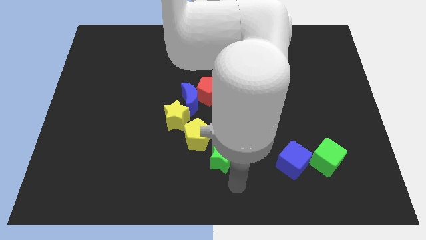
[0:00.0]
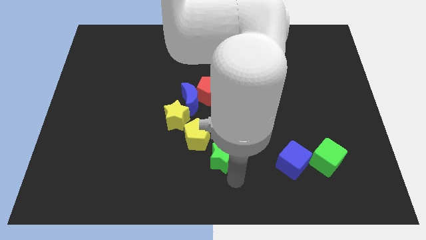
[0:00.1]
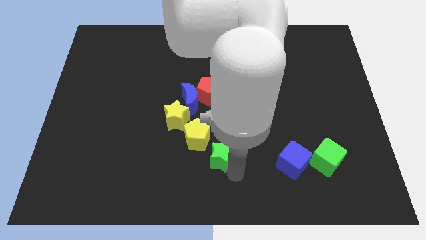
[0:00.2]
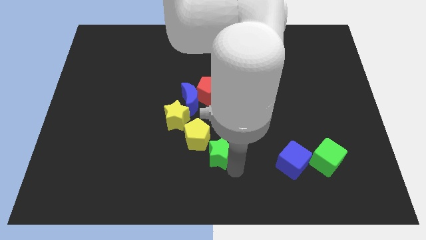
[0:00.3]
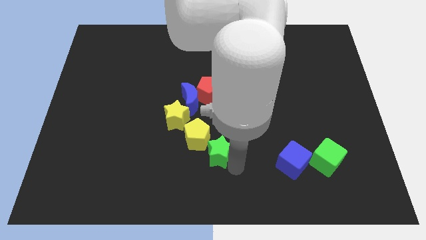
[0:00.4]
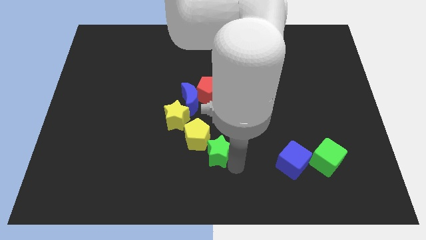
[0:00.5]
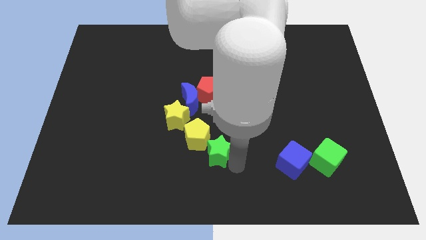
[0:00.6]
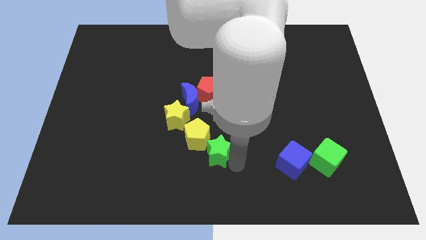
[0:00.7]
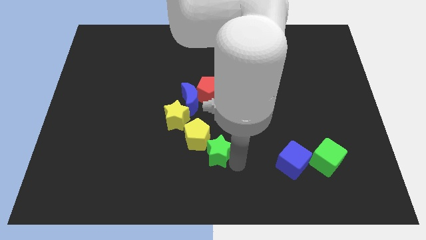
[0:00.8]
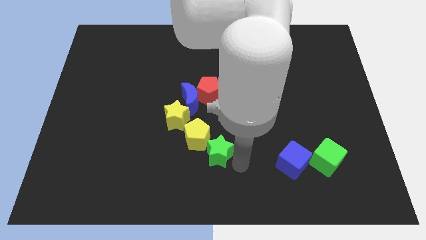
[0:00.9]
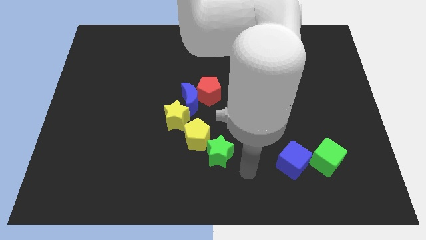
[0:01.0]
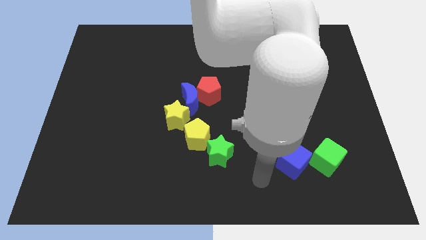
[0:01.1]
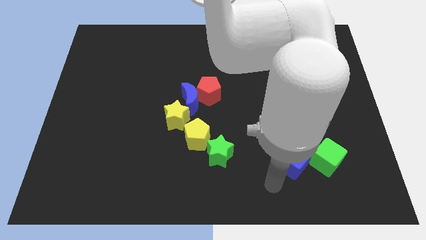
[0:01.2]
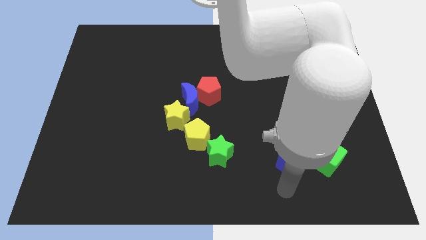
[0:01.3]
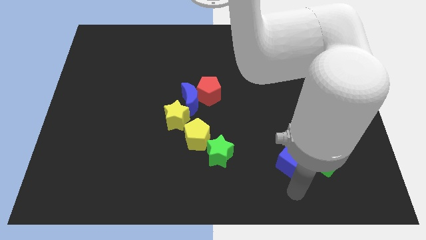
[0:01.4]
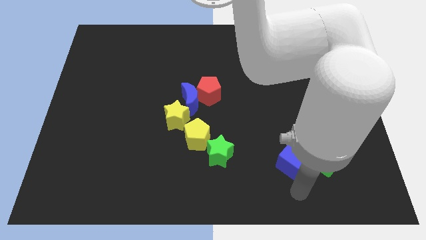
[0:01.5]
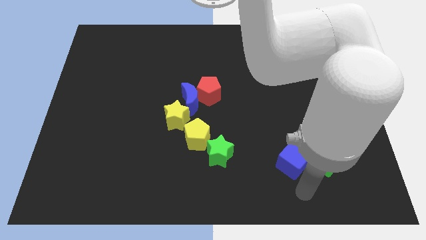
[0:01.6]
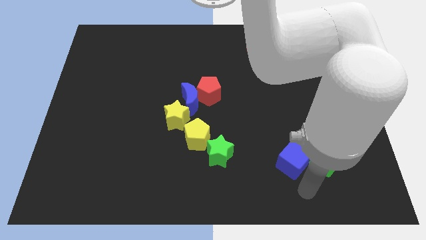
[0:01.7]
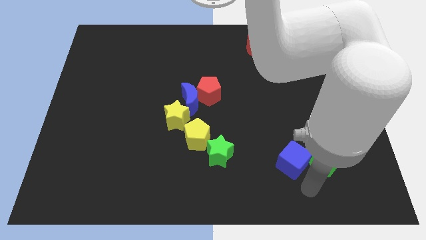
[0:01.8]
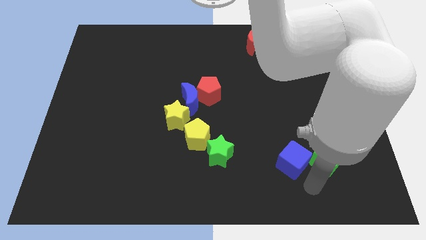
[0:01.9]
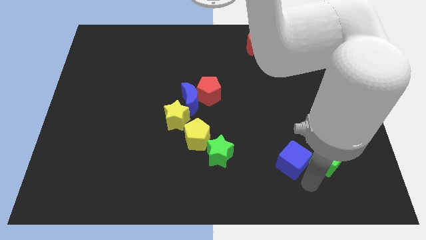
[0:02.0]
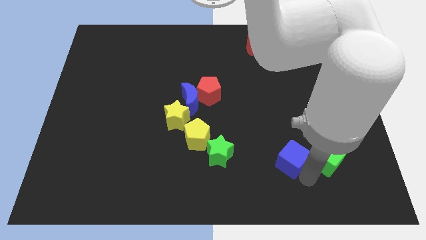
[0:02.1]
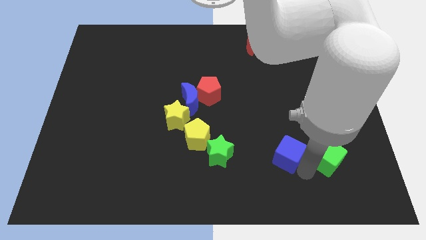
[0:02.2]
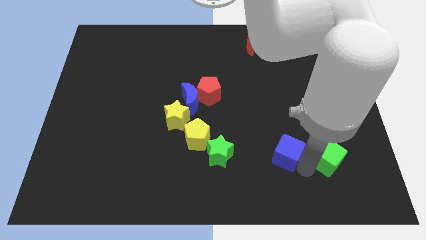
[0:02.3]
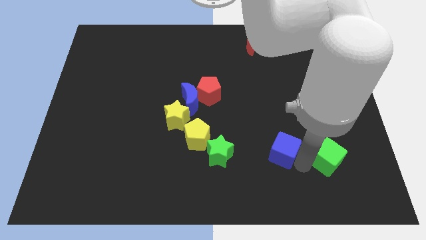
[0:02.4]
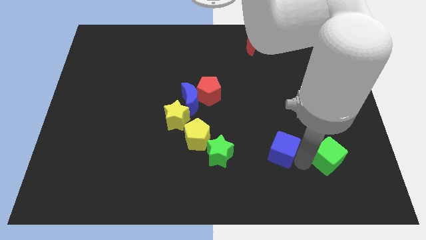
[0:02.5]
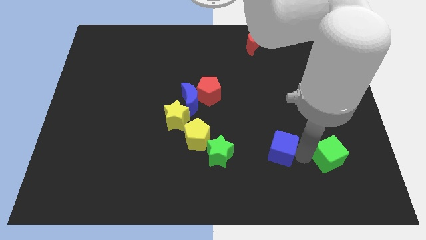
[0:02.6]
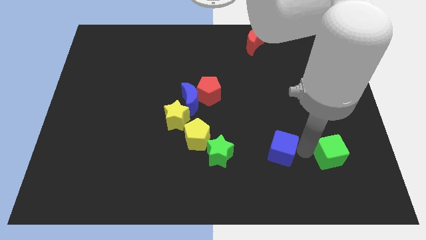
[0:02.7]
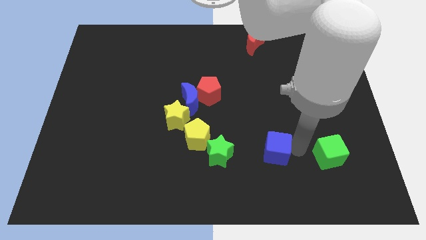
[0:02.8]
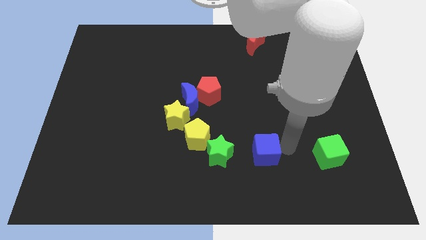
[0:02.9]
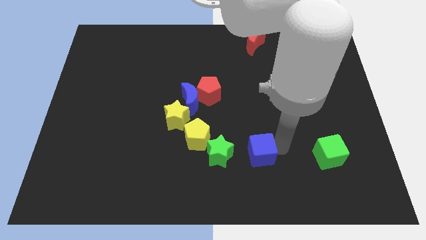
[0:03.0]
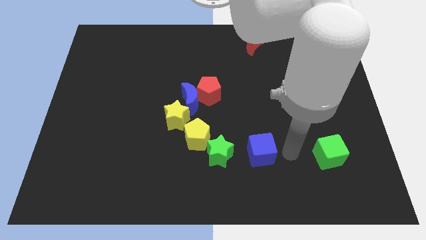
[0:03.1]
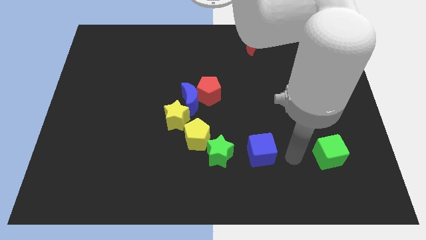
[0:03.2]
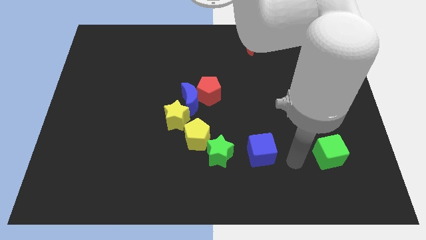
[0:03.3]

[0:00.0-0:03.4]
separate the blue cube from the green cube

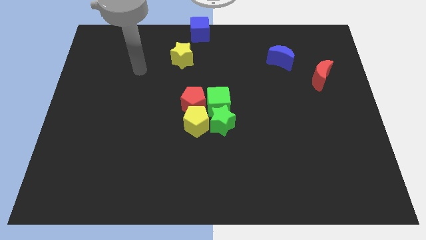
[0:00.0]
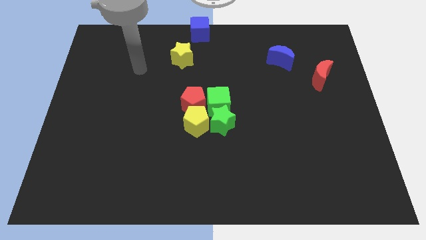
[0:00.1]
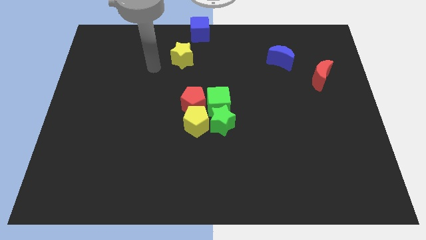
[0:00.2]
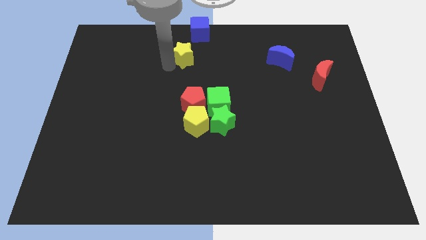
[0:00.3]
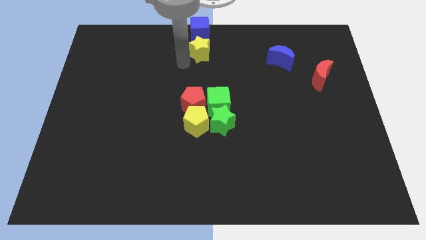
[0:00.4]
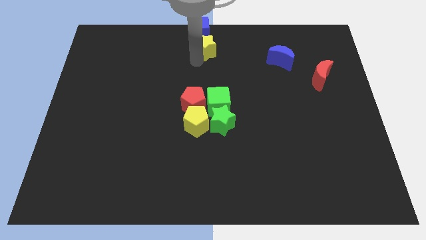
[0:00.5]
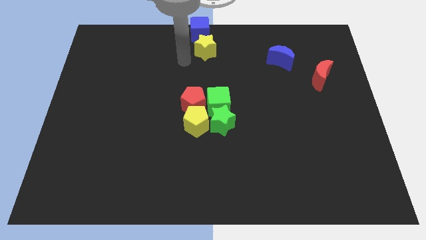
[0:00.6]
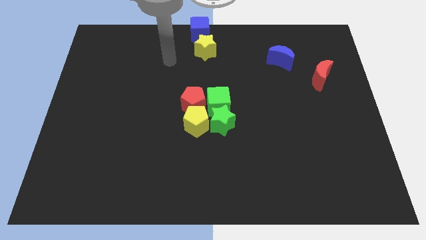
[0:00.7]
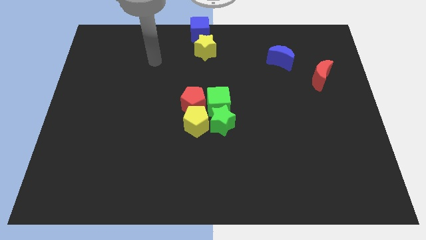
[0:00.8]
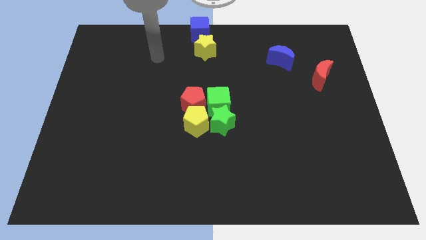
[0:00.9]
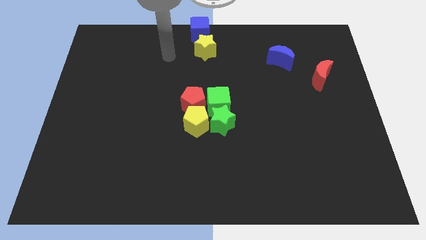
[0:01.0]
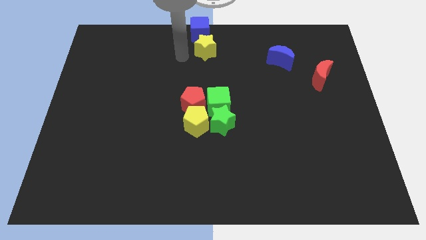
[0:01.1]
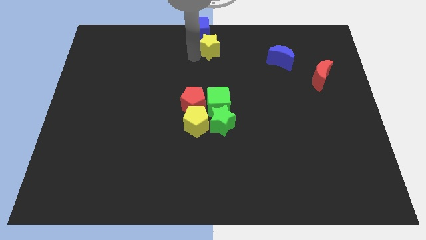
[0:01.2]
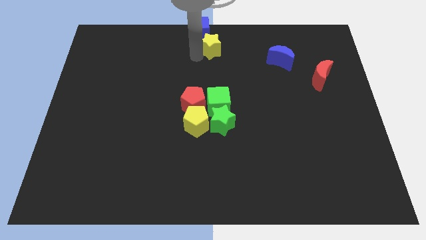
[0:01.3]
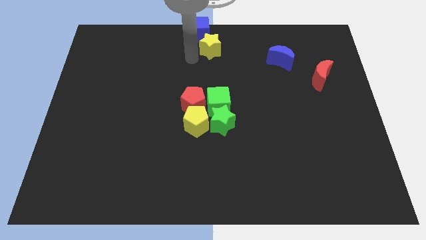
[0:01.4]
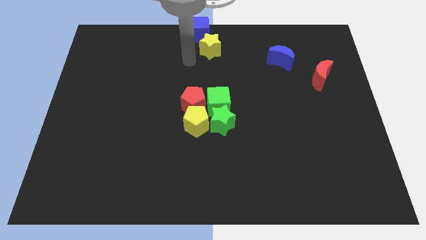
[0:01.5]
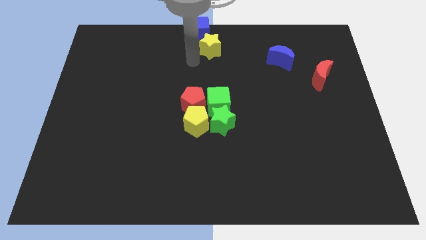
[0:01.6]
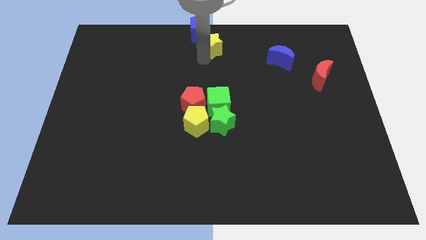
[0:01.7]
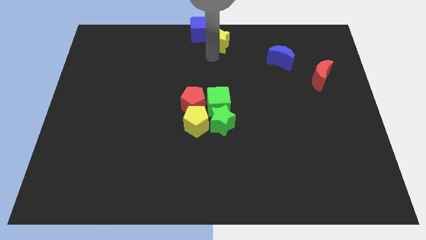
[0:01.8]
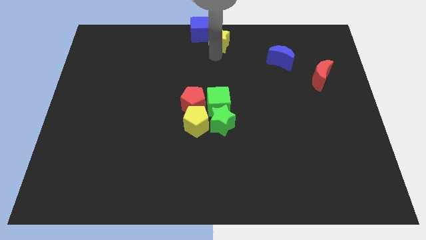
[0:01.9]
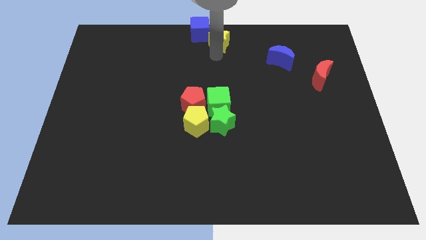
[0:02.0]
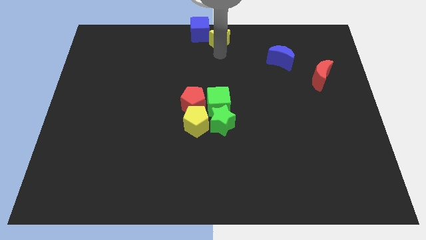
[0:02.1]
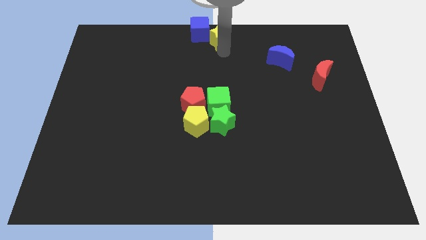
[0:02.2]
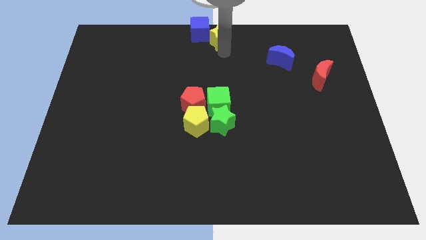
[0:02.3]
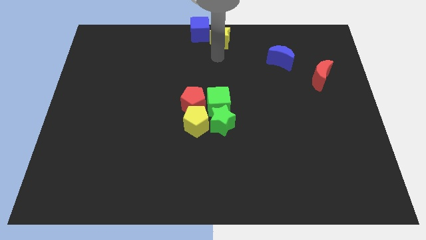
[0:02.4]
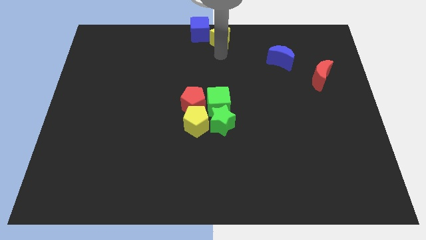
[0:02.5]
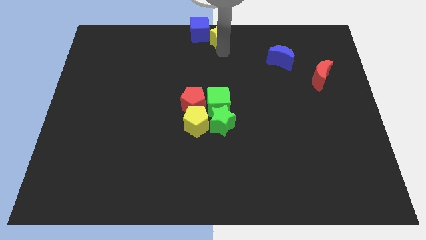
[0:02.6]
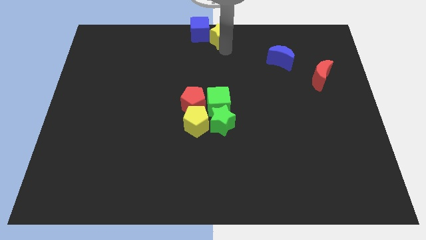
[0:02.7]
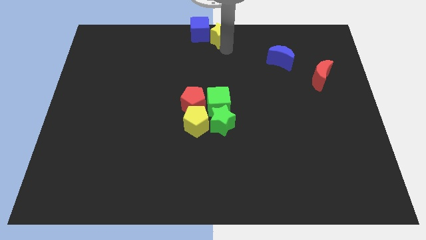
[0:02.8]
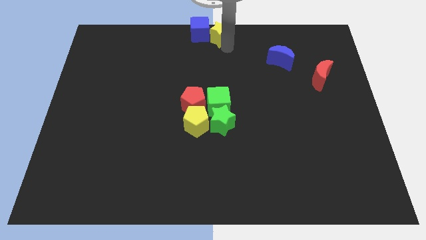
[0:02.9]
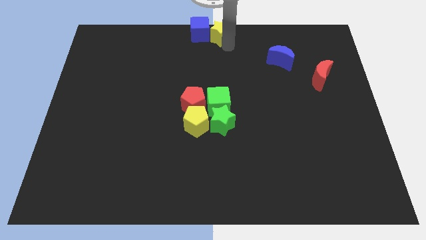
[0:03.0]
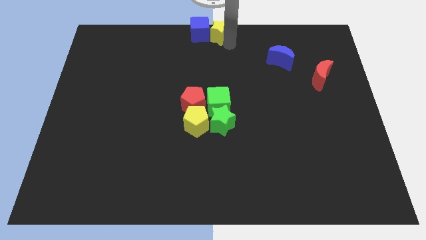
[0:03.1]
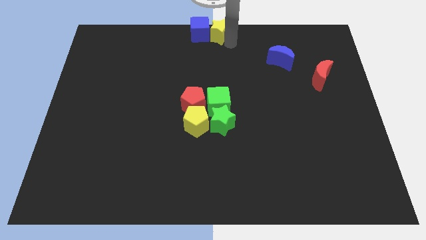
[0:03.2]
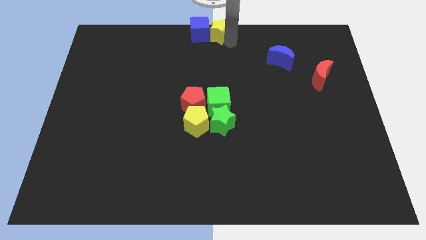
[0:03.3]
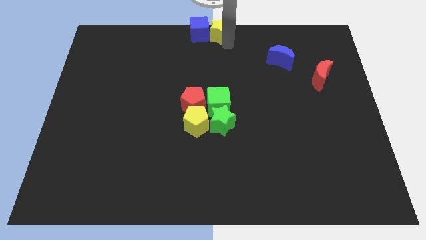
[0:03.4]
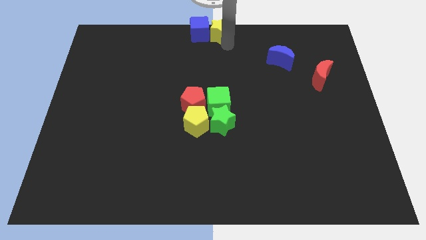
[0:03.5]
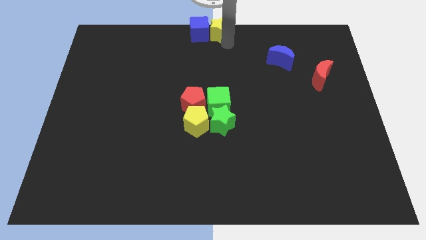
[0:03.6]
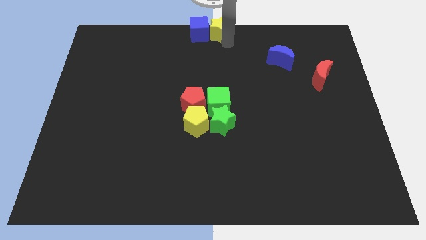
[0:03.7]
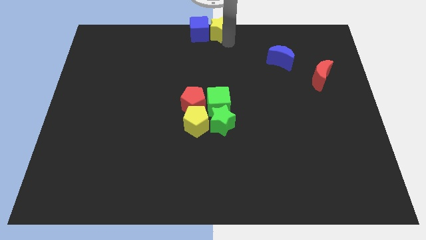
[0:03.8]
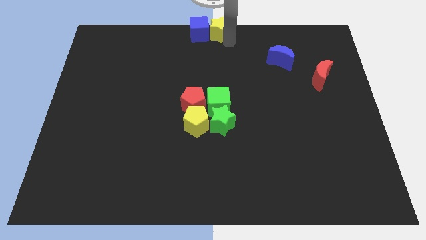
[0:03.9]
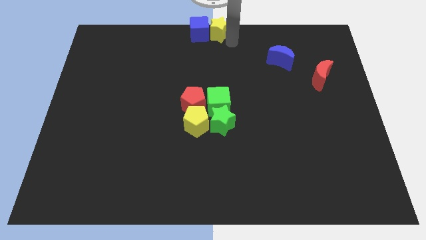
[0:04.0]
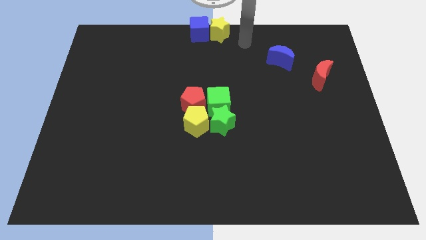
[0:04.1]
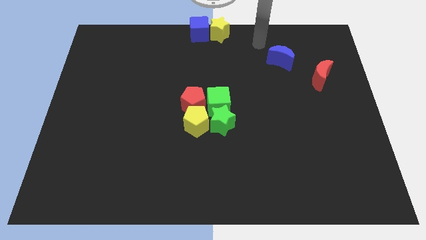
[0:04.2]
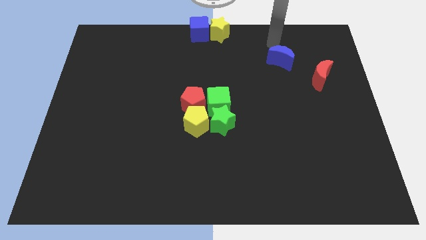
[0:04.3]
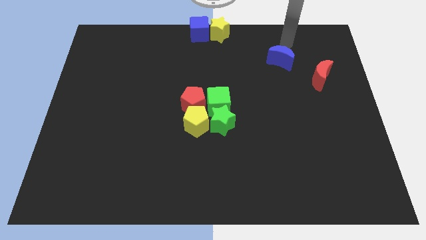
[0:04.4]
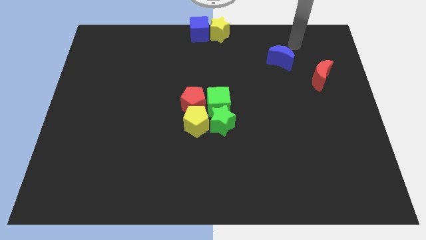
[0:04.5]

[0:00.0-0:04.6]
push the yellow star to the right of the blue cube

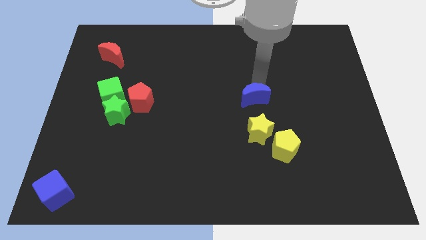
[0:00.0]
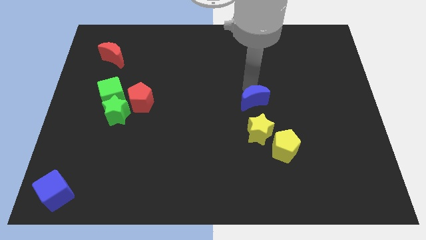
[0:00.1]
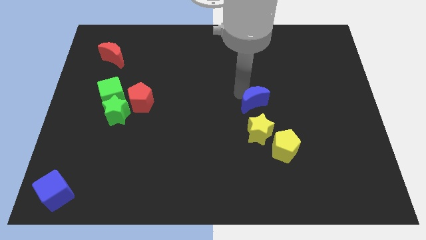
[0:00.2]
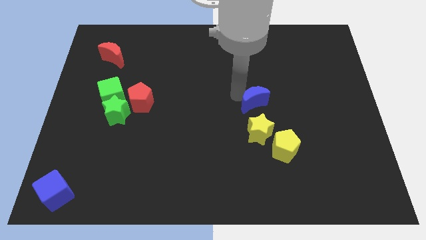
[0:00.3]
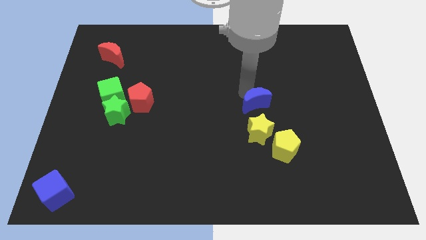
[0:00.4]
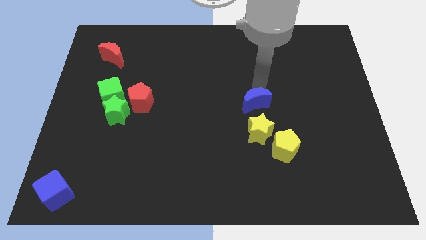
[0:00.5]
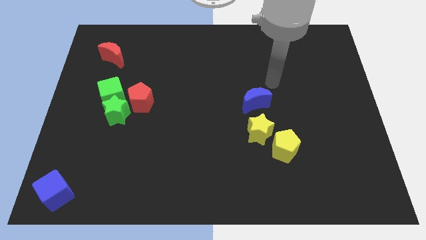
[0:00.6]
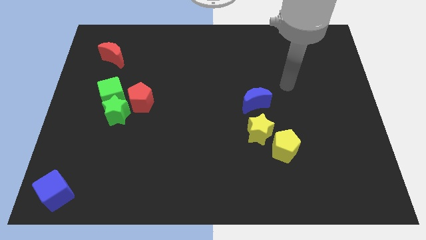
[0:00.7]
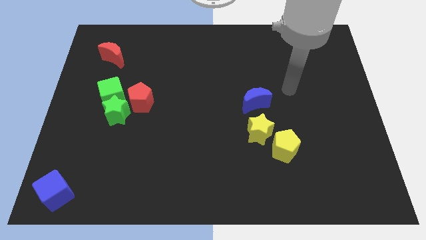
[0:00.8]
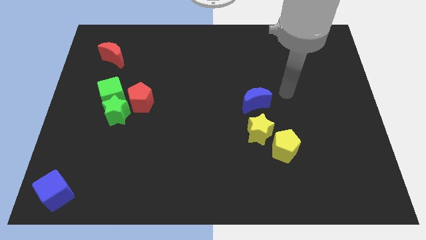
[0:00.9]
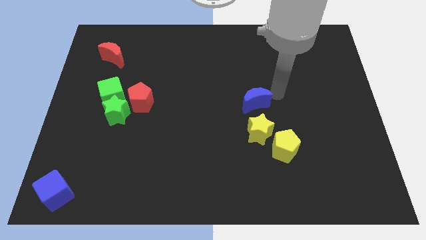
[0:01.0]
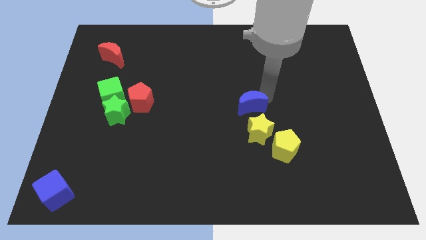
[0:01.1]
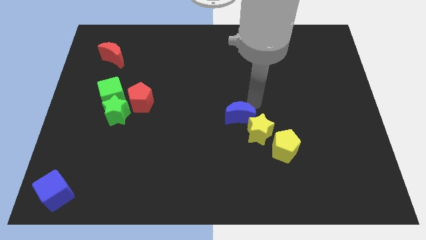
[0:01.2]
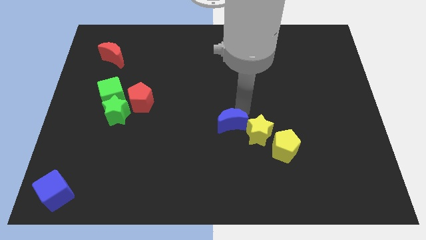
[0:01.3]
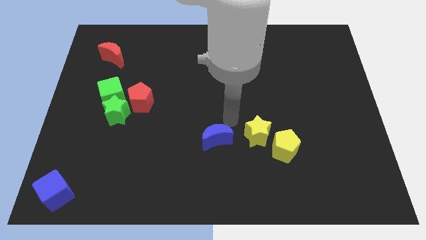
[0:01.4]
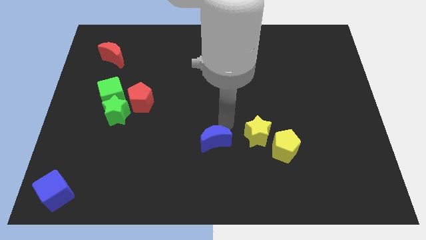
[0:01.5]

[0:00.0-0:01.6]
slide the blue moon parallel left to the yellow star
